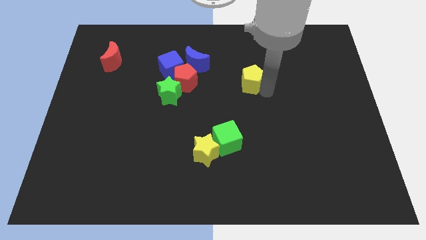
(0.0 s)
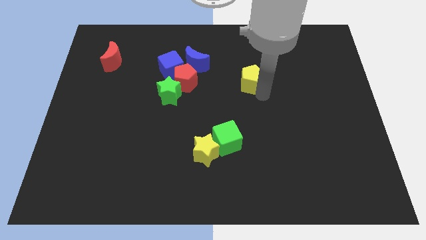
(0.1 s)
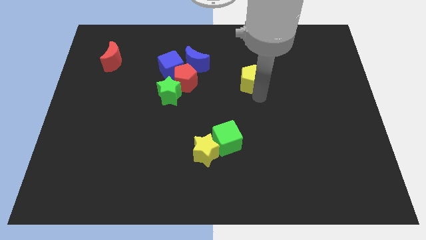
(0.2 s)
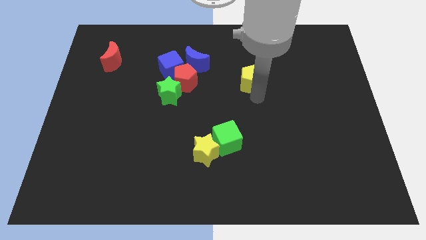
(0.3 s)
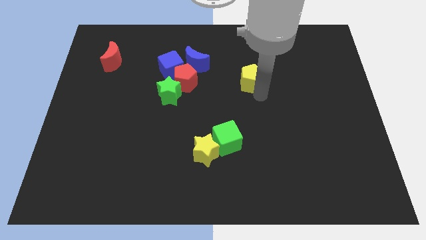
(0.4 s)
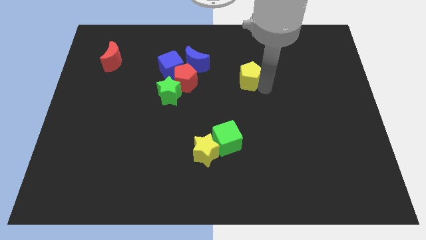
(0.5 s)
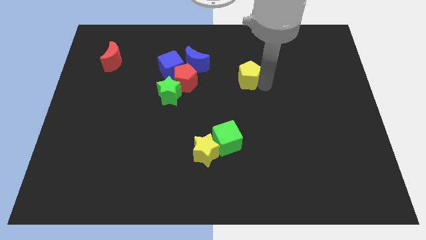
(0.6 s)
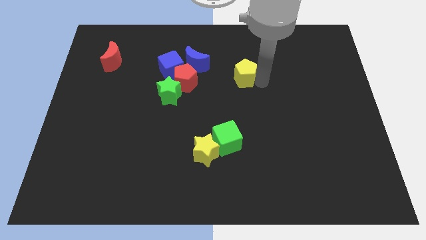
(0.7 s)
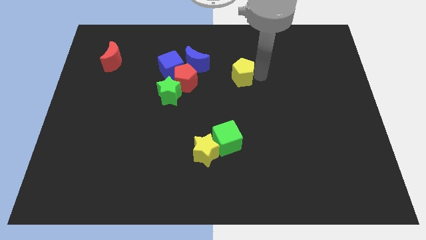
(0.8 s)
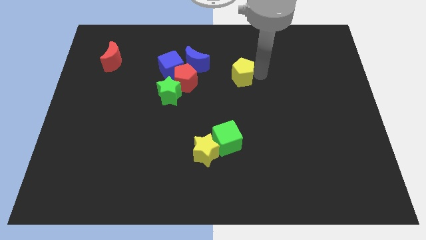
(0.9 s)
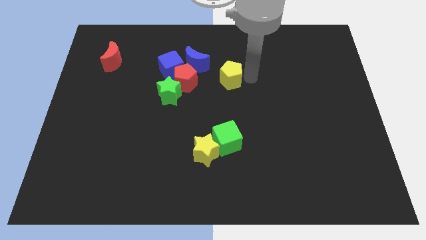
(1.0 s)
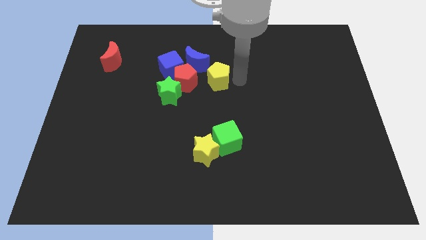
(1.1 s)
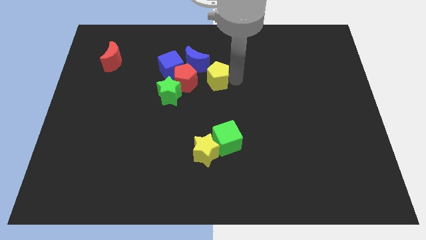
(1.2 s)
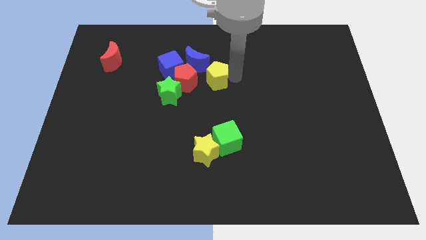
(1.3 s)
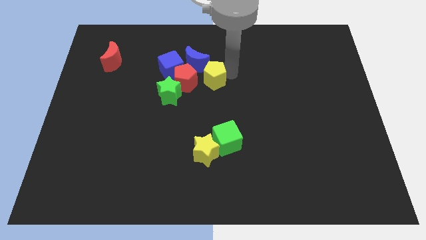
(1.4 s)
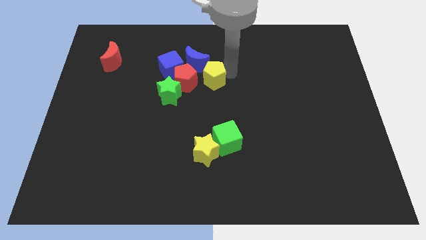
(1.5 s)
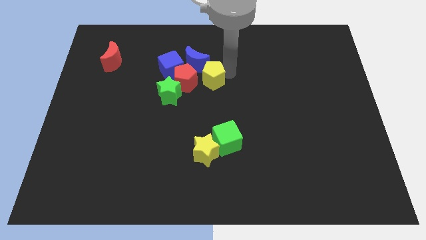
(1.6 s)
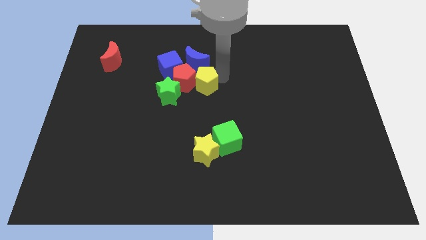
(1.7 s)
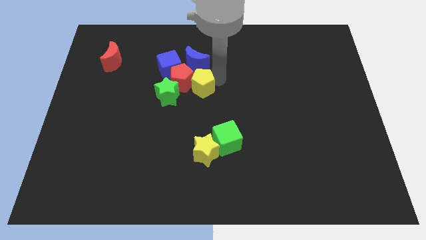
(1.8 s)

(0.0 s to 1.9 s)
add yellow pentagon to the blue cubeblue moon and red pentagon

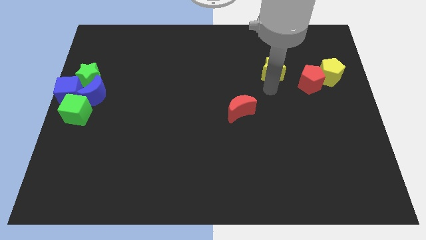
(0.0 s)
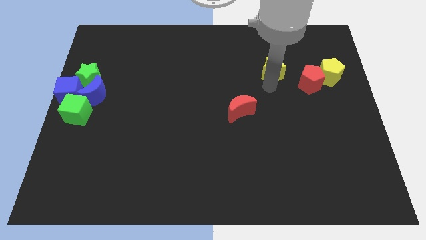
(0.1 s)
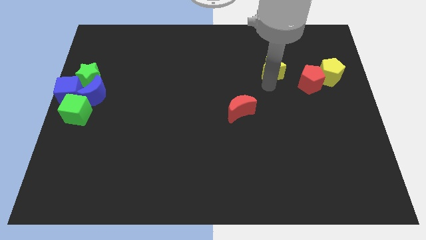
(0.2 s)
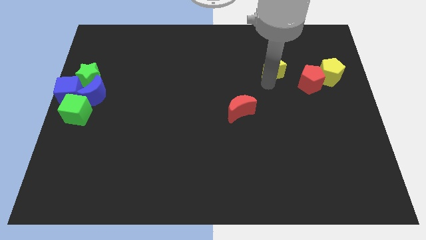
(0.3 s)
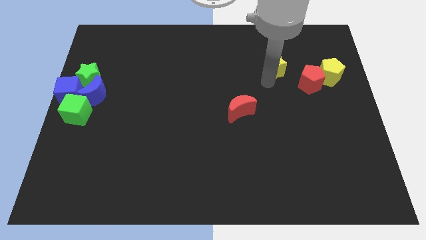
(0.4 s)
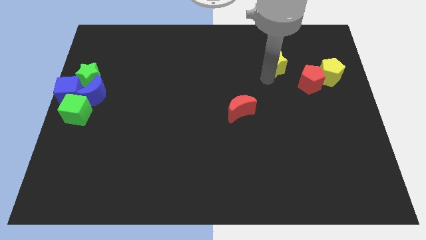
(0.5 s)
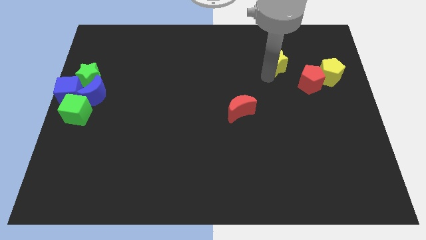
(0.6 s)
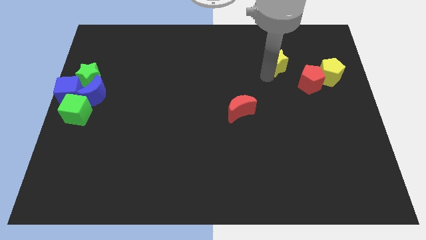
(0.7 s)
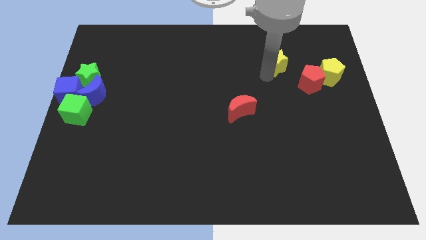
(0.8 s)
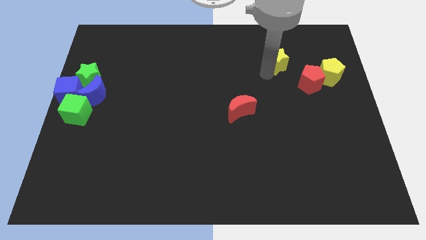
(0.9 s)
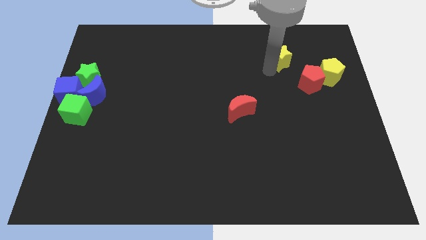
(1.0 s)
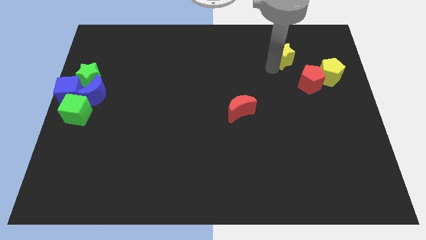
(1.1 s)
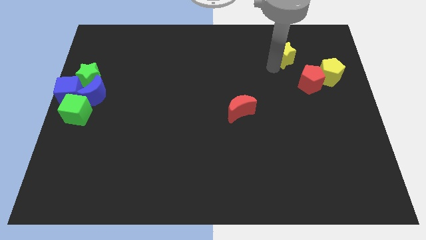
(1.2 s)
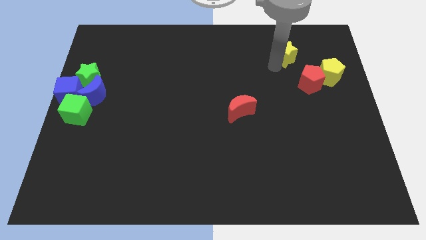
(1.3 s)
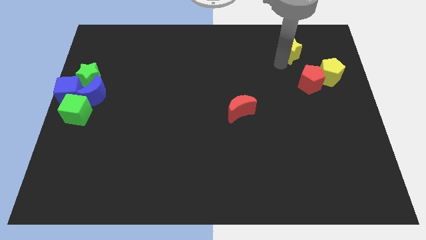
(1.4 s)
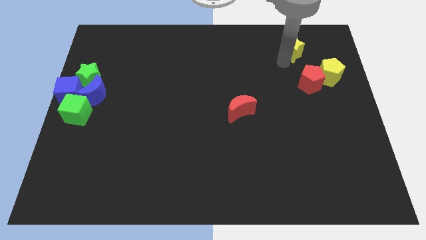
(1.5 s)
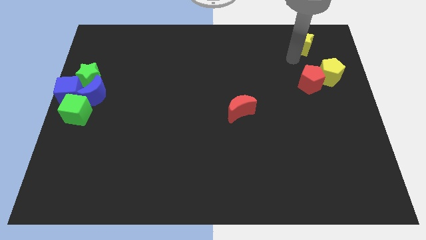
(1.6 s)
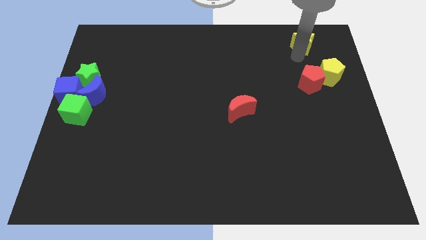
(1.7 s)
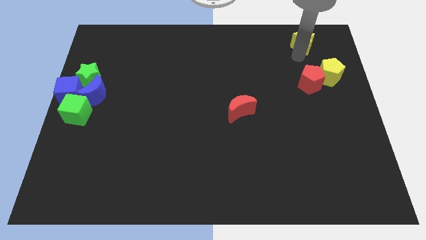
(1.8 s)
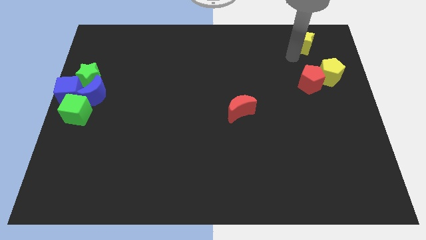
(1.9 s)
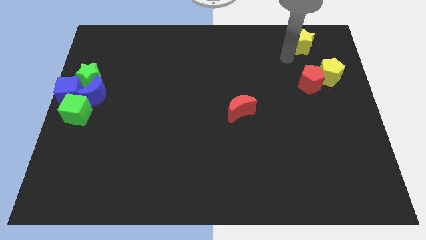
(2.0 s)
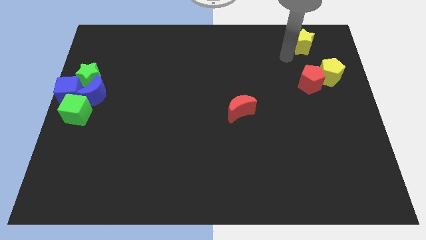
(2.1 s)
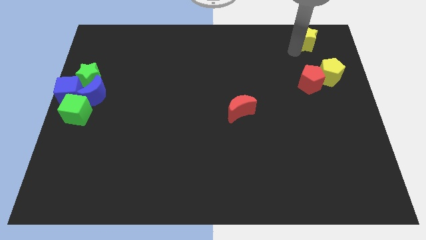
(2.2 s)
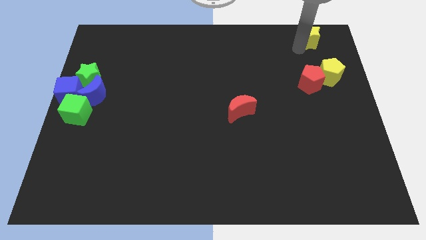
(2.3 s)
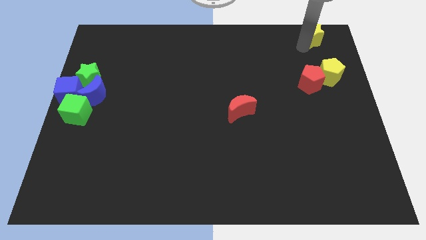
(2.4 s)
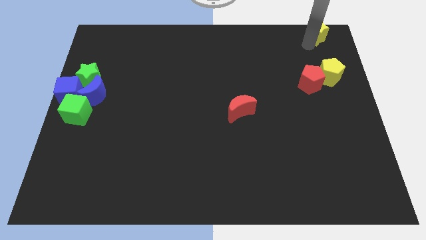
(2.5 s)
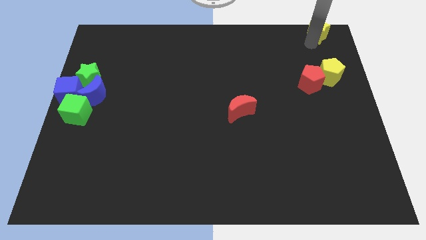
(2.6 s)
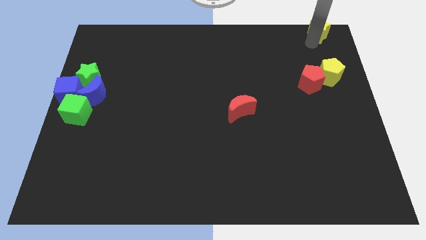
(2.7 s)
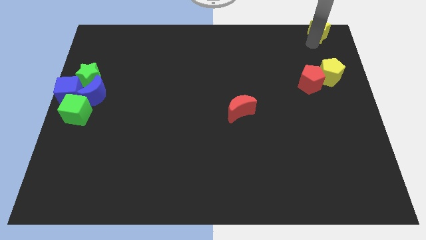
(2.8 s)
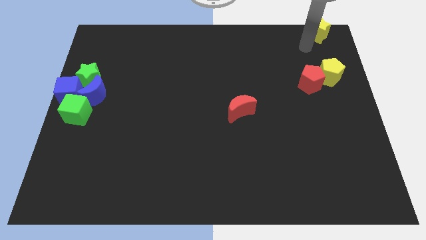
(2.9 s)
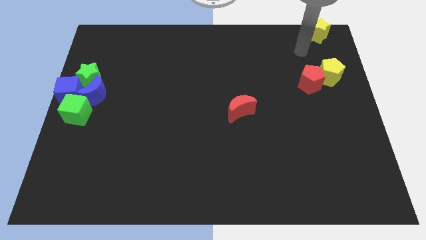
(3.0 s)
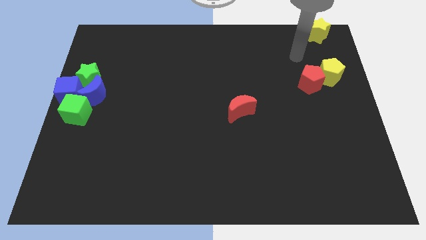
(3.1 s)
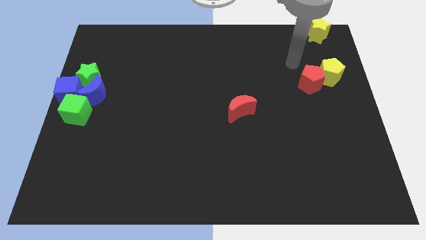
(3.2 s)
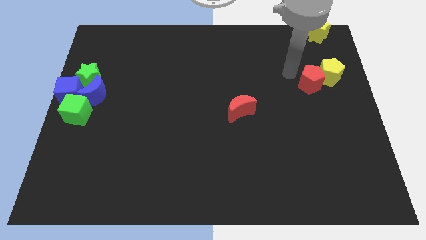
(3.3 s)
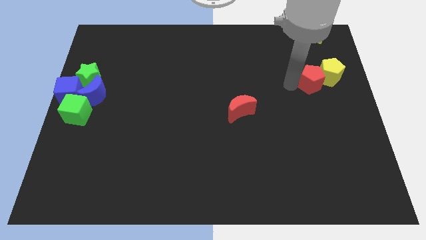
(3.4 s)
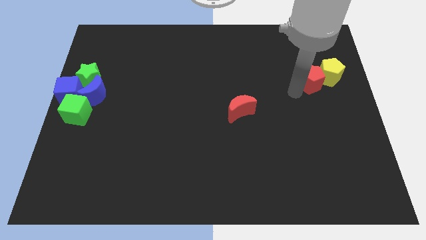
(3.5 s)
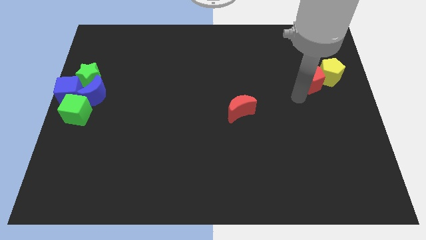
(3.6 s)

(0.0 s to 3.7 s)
place the yellow star to the top right

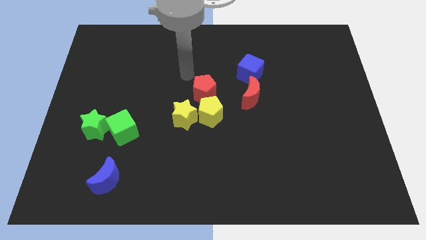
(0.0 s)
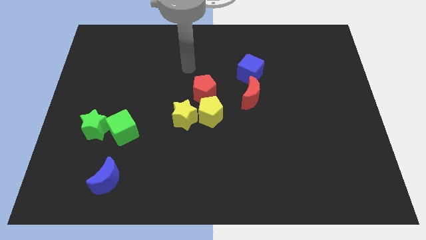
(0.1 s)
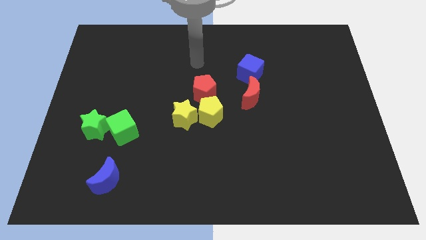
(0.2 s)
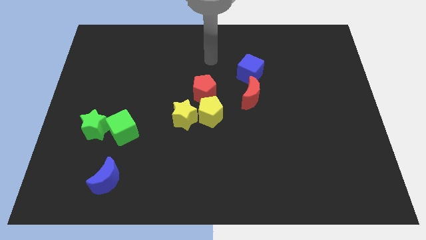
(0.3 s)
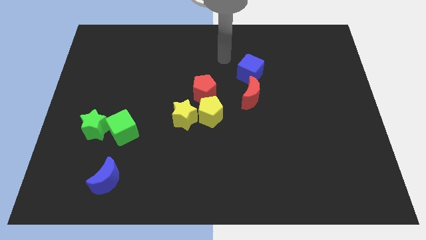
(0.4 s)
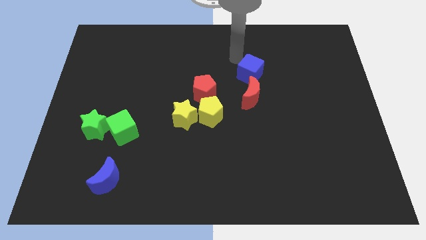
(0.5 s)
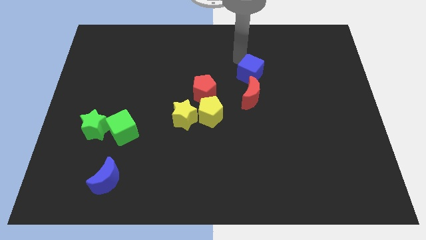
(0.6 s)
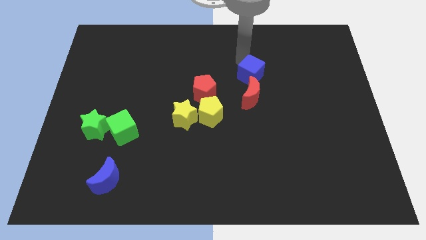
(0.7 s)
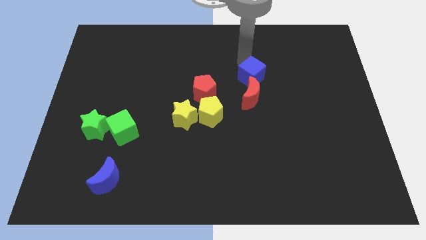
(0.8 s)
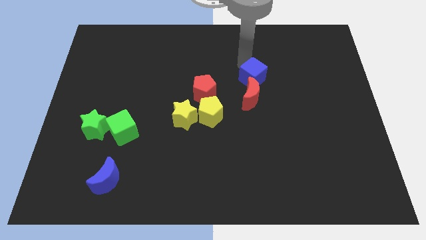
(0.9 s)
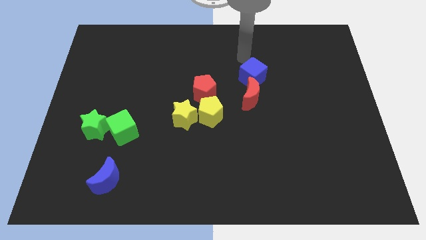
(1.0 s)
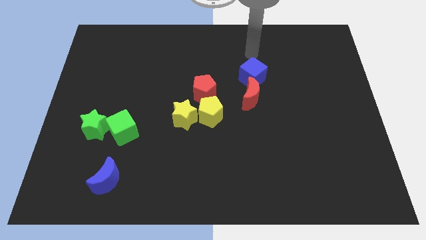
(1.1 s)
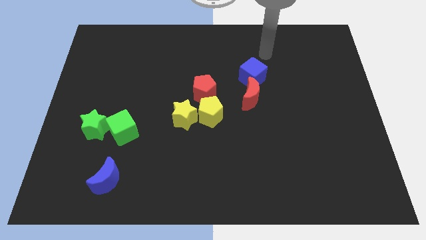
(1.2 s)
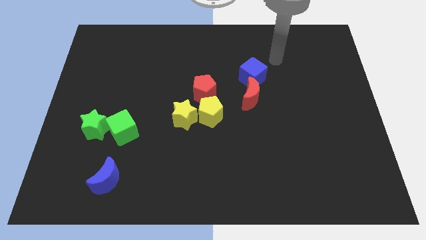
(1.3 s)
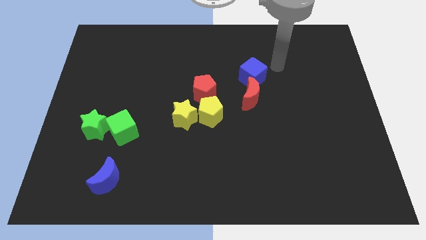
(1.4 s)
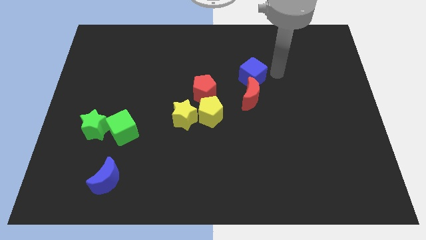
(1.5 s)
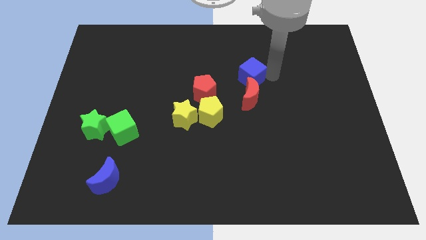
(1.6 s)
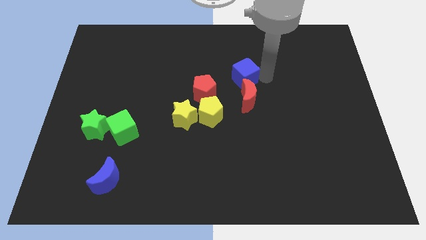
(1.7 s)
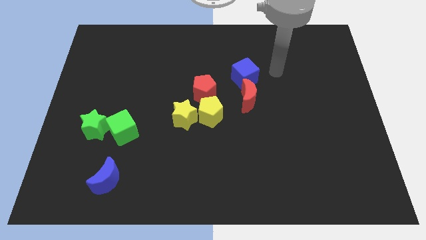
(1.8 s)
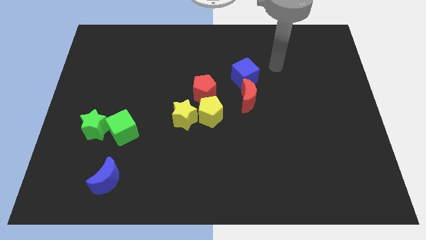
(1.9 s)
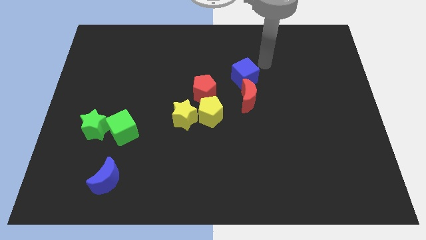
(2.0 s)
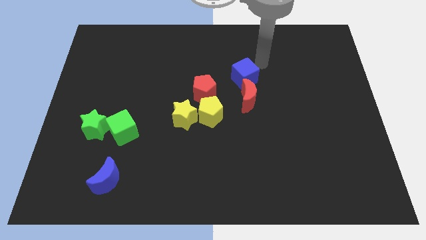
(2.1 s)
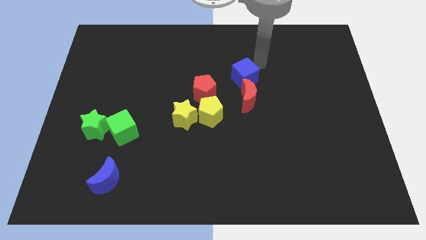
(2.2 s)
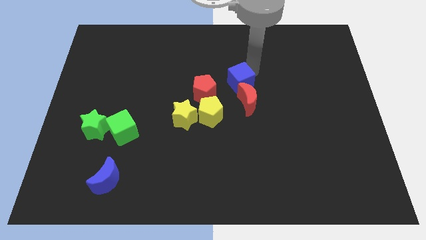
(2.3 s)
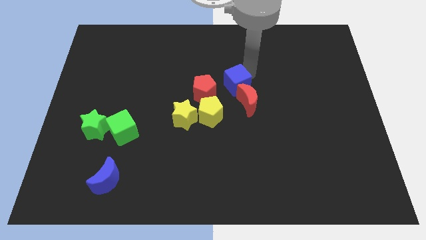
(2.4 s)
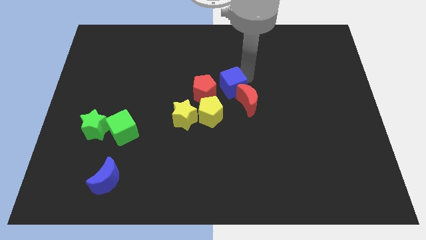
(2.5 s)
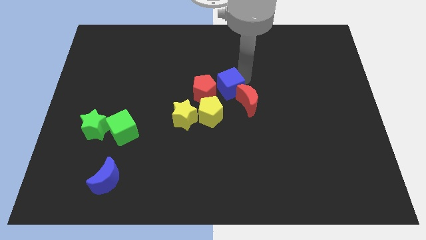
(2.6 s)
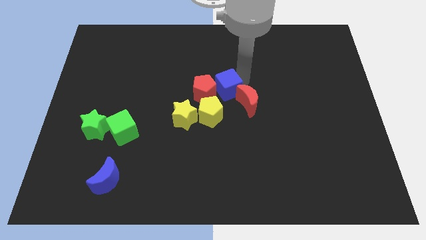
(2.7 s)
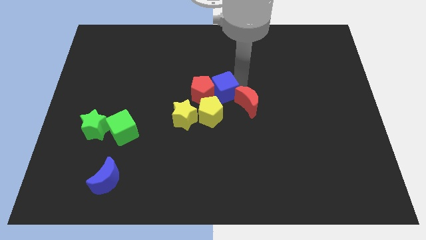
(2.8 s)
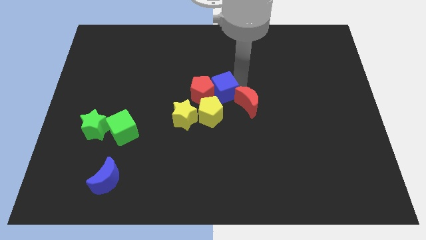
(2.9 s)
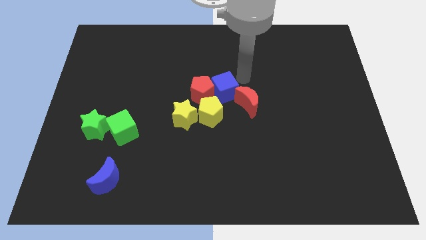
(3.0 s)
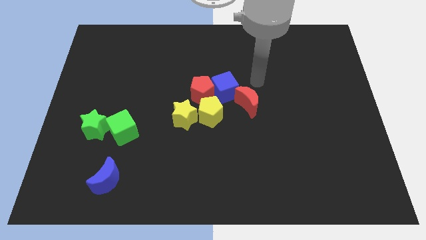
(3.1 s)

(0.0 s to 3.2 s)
push the blue cube into the red pentagon

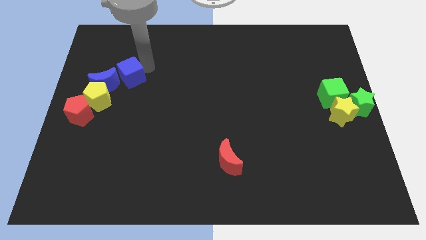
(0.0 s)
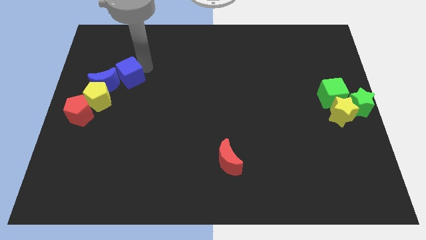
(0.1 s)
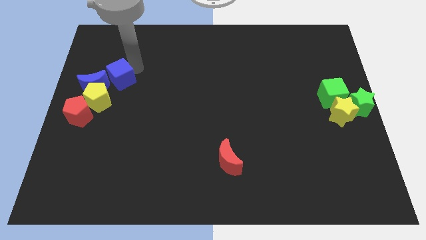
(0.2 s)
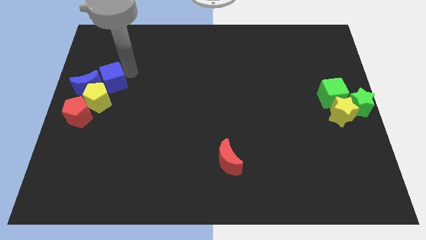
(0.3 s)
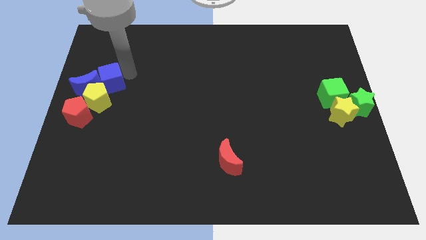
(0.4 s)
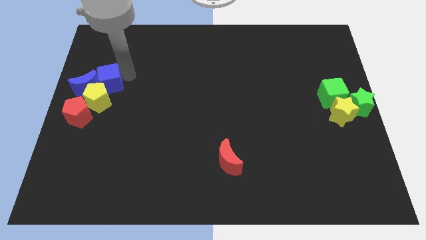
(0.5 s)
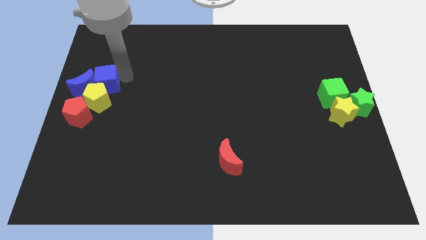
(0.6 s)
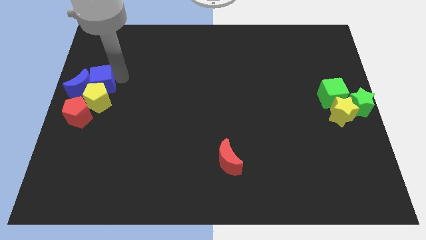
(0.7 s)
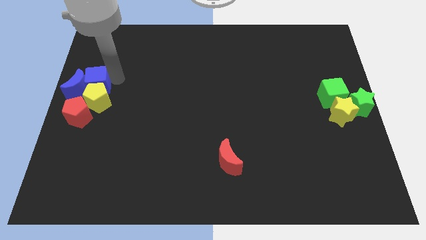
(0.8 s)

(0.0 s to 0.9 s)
push the blue cube into the blue crescent from the right
